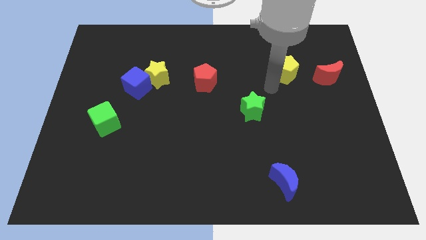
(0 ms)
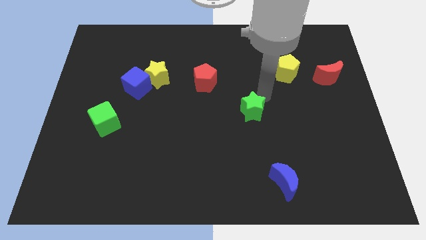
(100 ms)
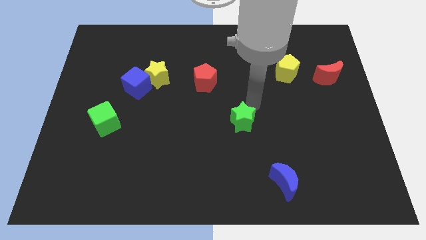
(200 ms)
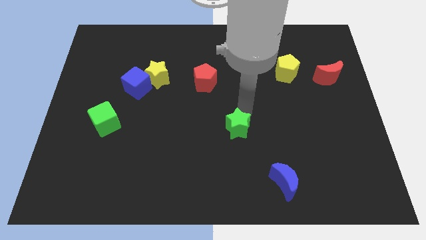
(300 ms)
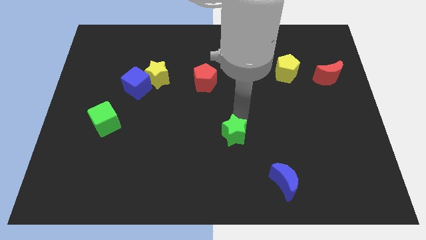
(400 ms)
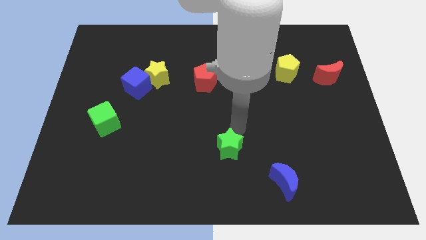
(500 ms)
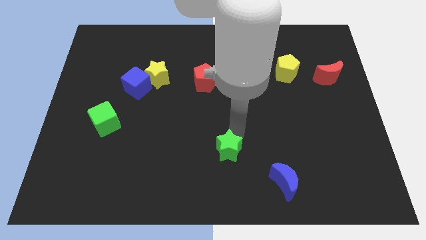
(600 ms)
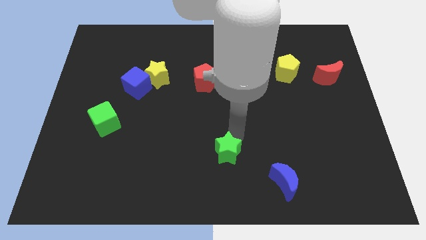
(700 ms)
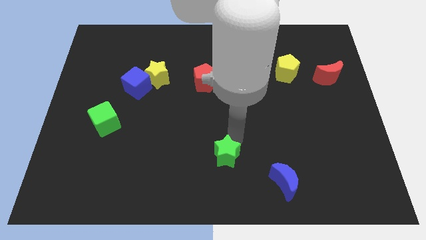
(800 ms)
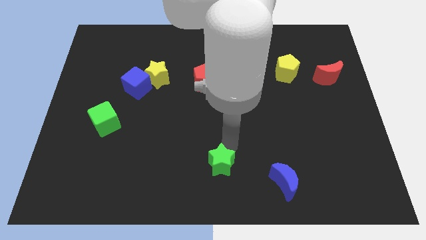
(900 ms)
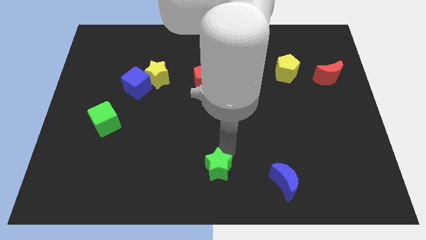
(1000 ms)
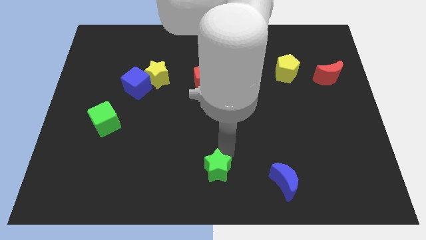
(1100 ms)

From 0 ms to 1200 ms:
push the green star towards the bottom center of the board

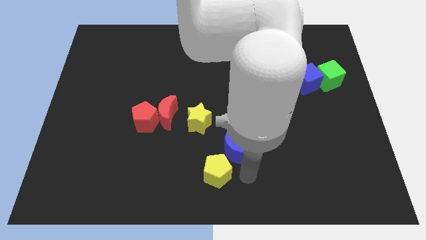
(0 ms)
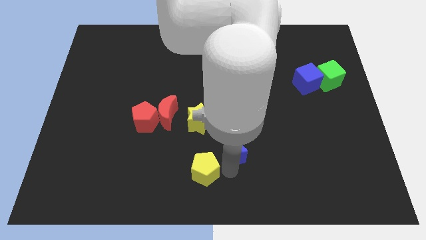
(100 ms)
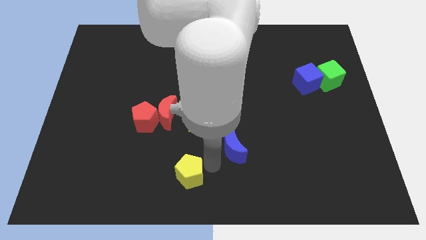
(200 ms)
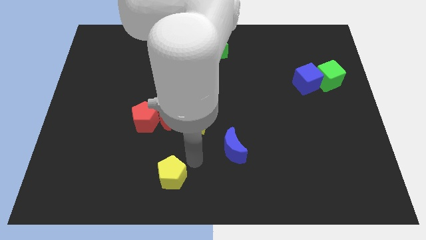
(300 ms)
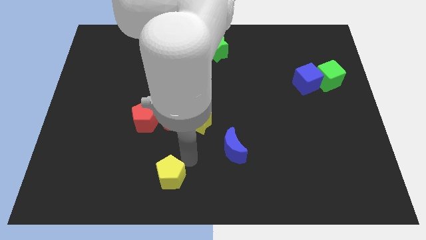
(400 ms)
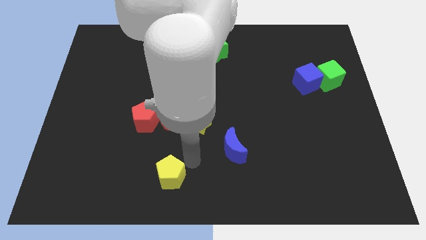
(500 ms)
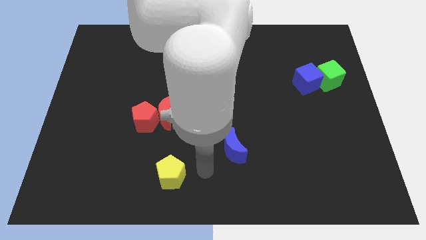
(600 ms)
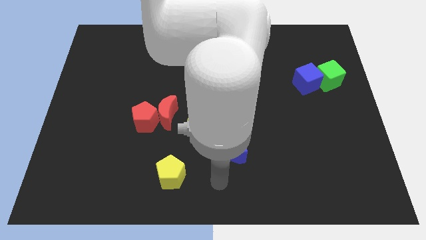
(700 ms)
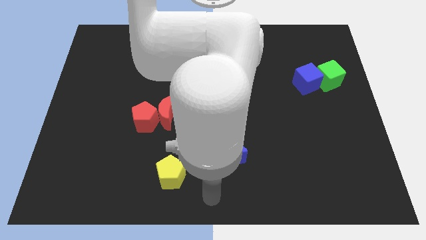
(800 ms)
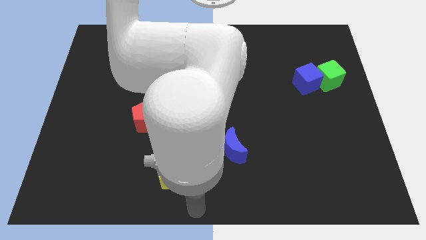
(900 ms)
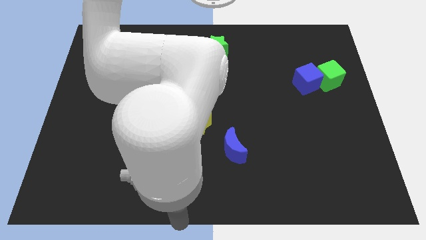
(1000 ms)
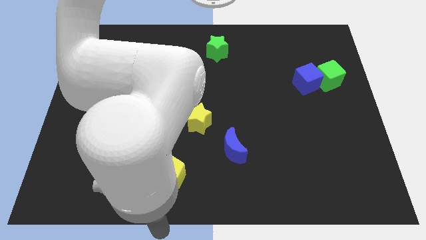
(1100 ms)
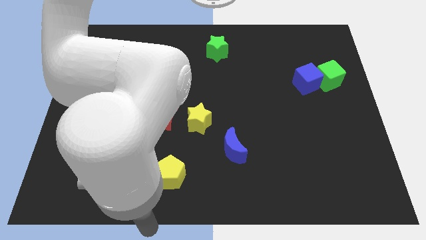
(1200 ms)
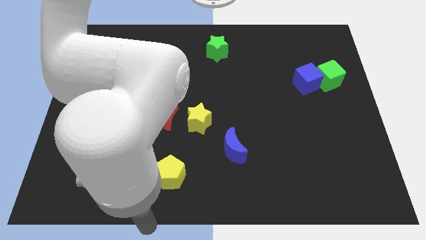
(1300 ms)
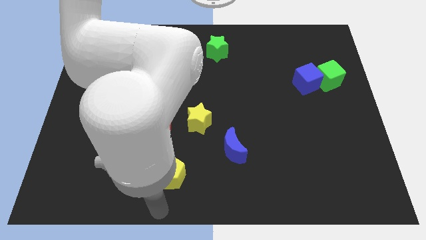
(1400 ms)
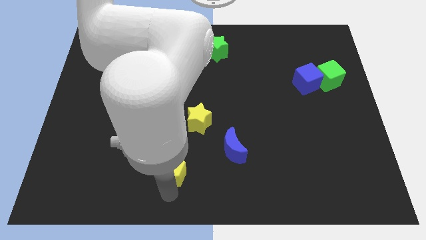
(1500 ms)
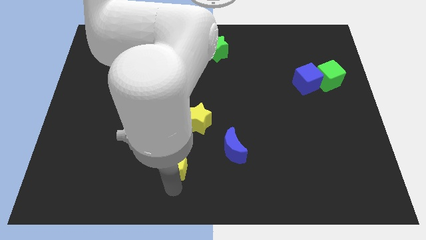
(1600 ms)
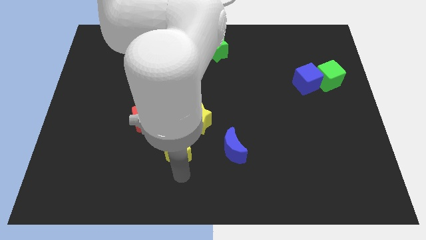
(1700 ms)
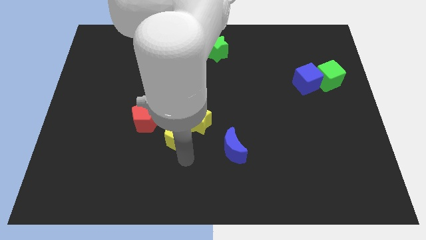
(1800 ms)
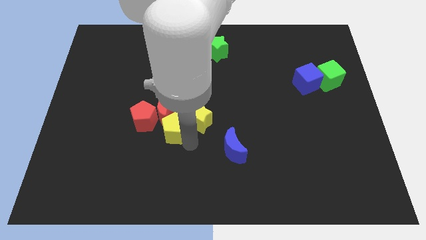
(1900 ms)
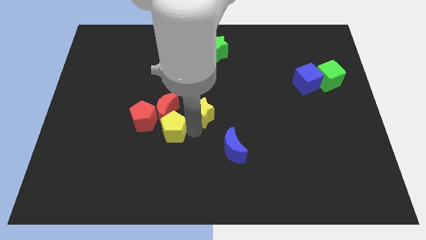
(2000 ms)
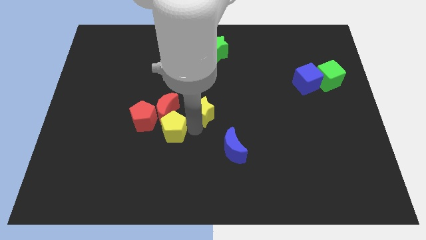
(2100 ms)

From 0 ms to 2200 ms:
push the yellow pentagon into a group of blocks

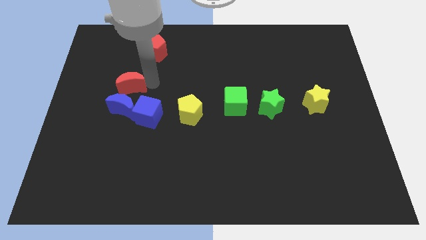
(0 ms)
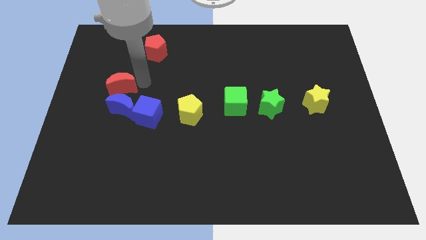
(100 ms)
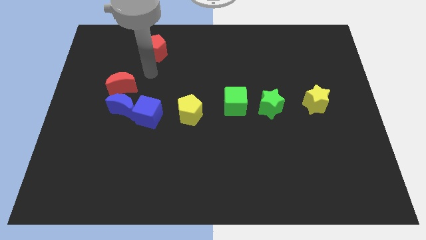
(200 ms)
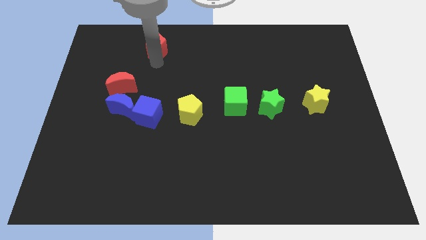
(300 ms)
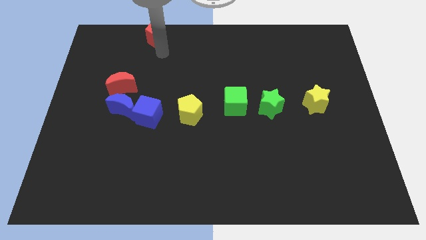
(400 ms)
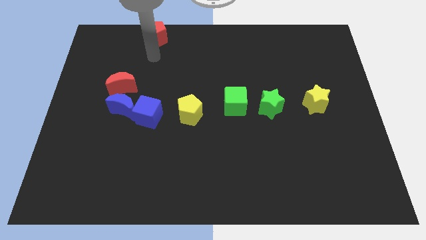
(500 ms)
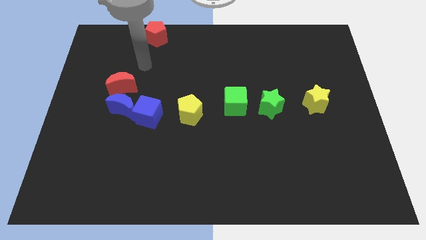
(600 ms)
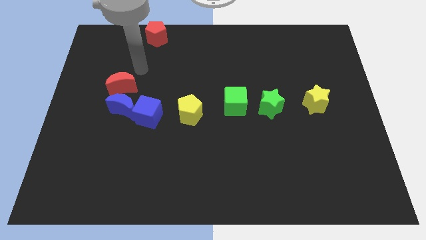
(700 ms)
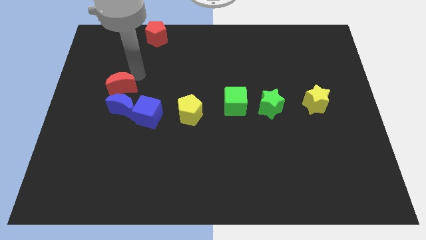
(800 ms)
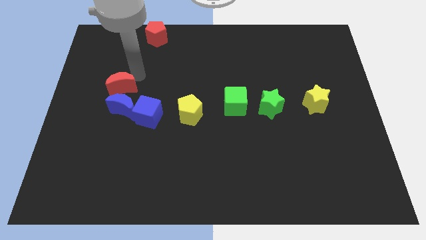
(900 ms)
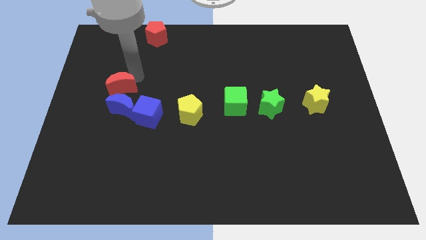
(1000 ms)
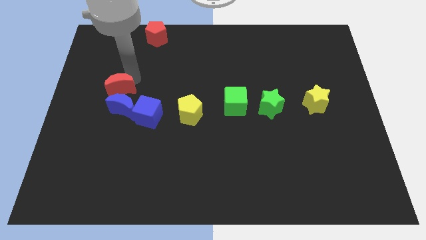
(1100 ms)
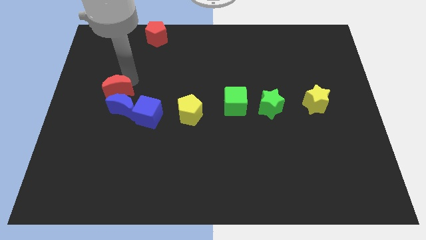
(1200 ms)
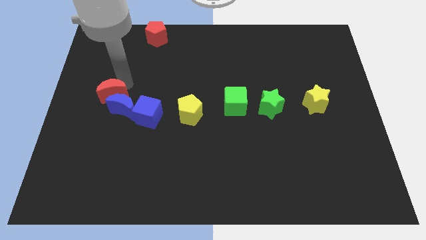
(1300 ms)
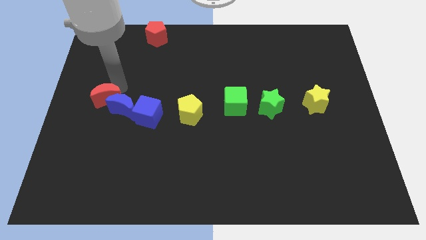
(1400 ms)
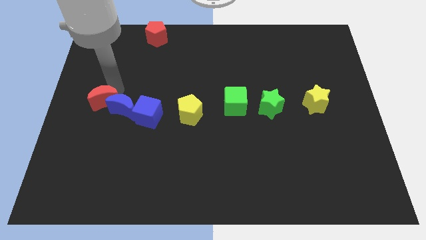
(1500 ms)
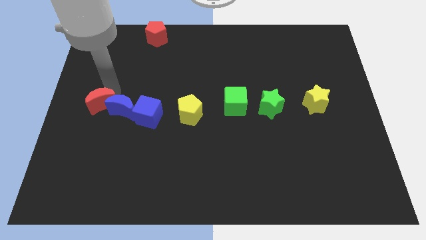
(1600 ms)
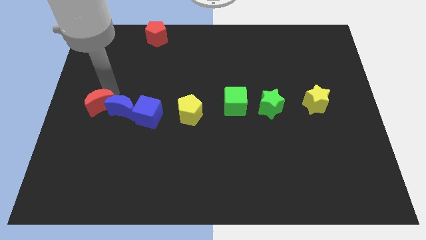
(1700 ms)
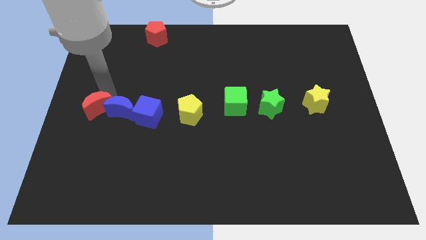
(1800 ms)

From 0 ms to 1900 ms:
push the red crescent into blue crescent

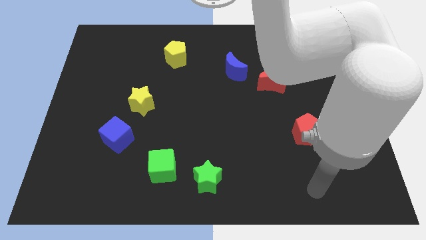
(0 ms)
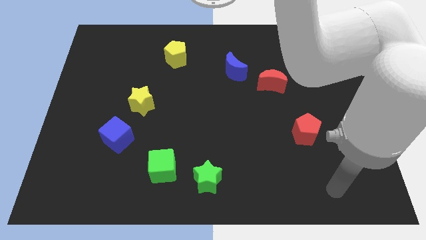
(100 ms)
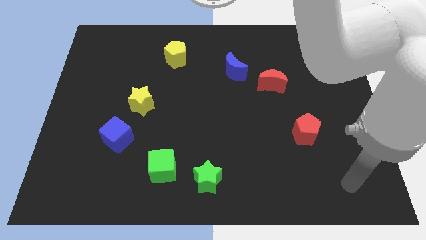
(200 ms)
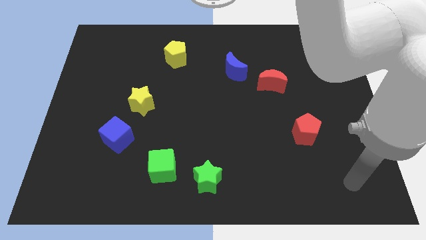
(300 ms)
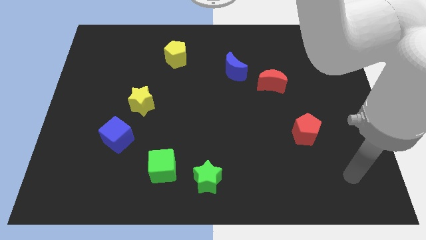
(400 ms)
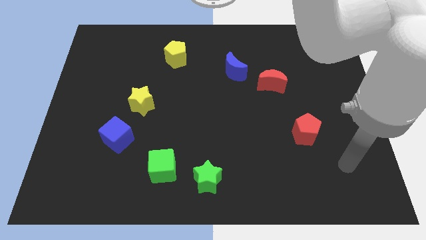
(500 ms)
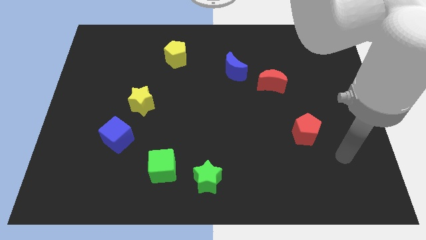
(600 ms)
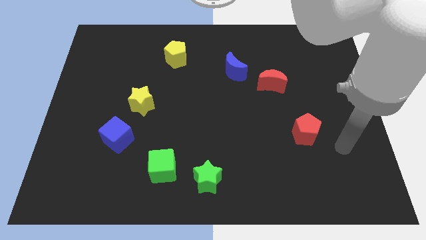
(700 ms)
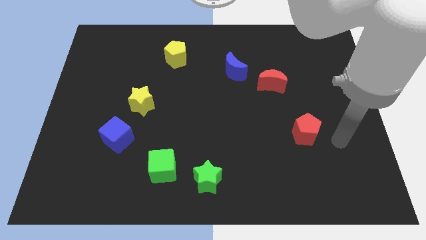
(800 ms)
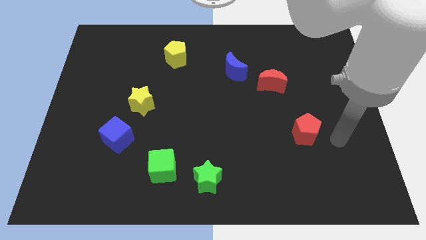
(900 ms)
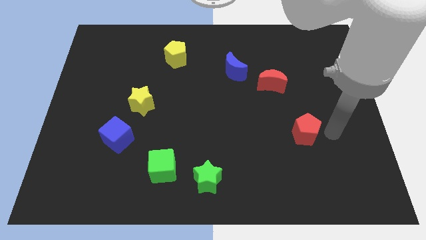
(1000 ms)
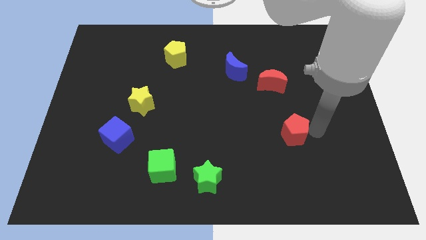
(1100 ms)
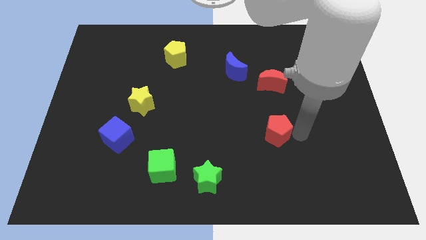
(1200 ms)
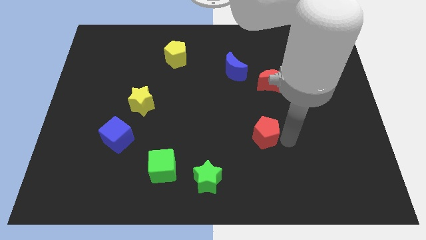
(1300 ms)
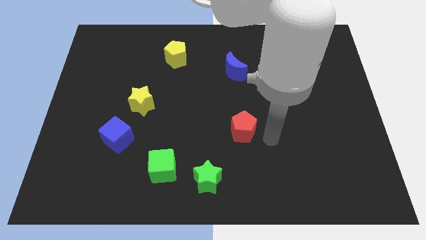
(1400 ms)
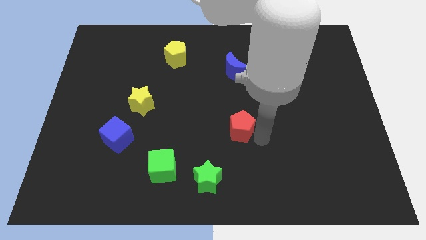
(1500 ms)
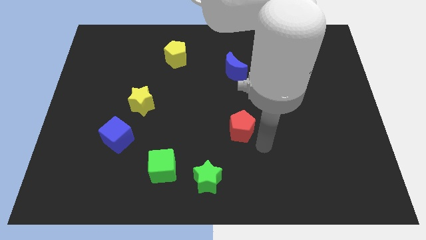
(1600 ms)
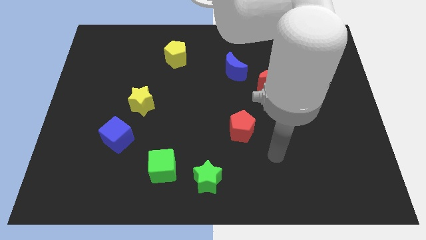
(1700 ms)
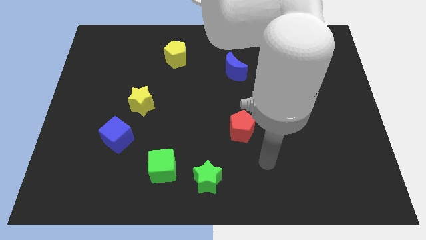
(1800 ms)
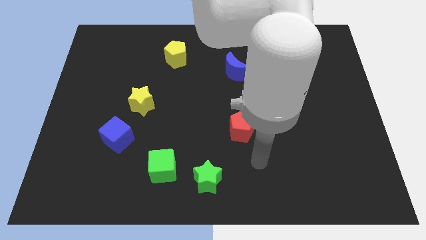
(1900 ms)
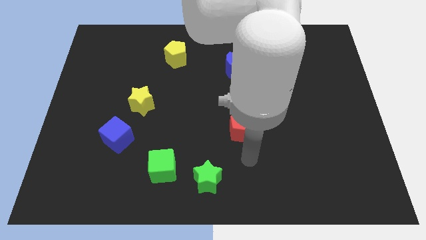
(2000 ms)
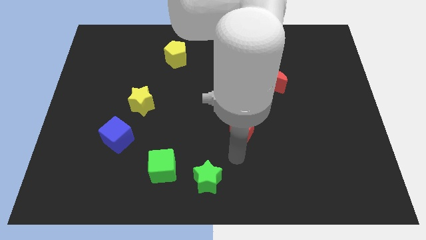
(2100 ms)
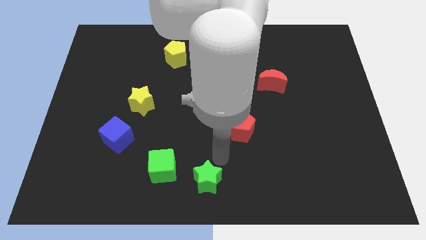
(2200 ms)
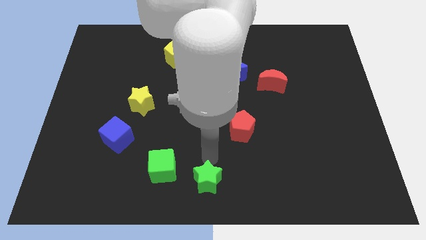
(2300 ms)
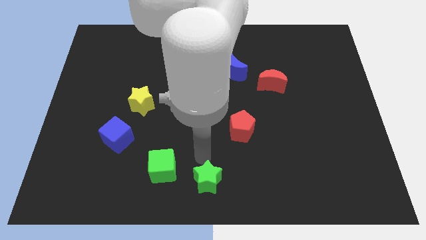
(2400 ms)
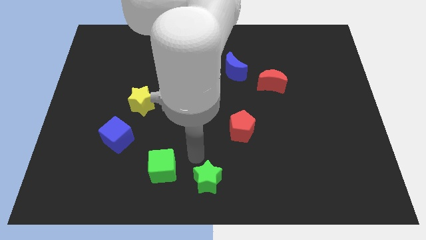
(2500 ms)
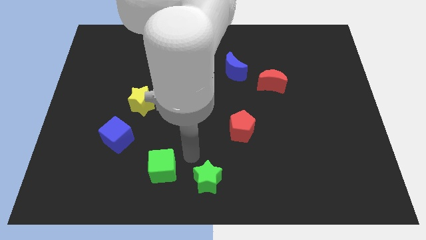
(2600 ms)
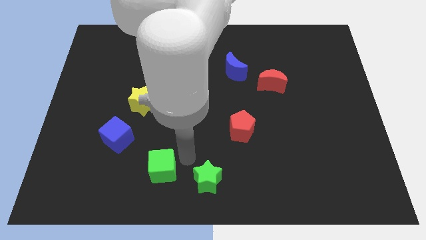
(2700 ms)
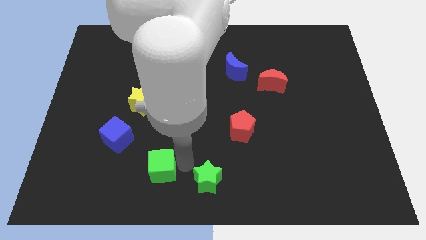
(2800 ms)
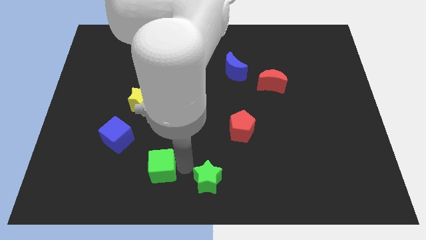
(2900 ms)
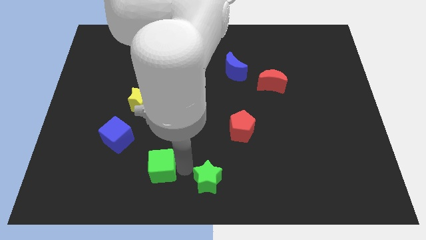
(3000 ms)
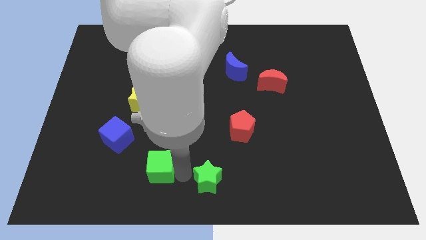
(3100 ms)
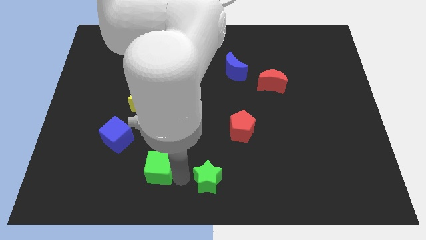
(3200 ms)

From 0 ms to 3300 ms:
put the red pentagon between the green star and red moon
